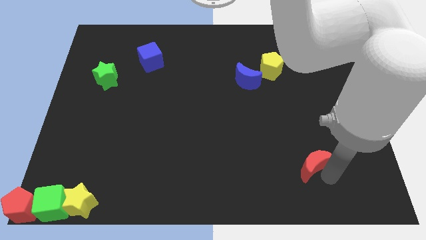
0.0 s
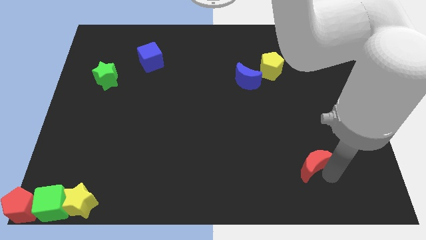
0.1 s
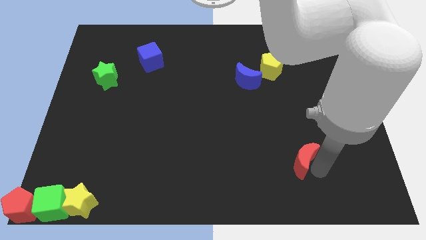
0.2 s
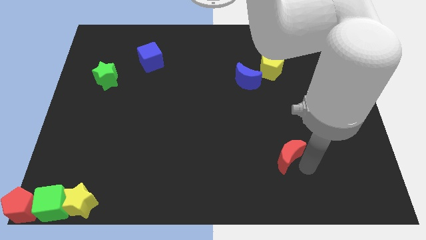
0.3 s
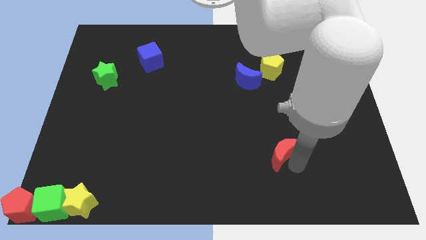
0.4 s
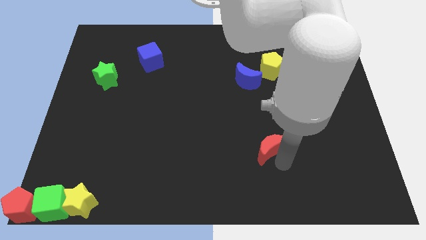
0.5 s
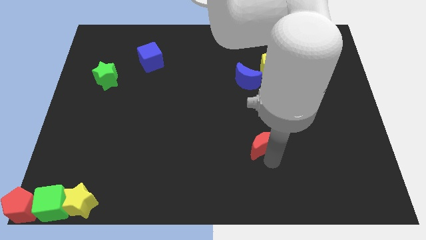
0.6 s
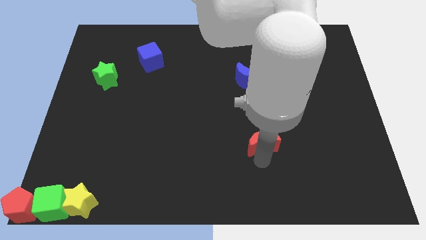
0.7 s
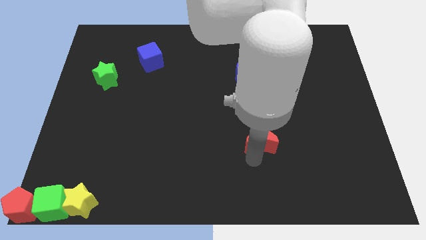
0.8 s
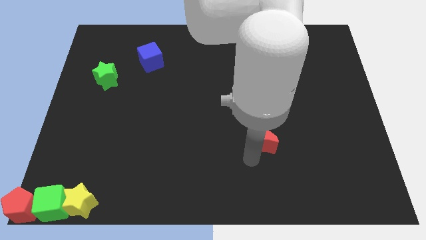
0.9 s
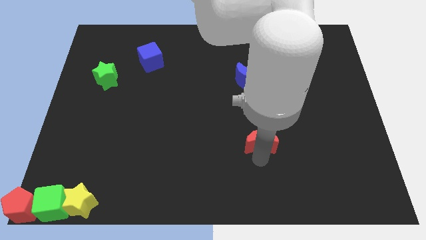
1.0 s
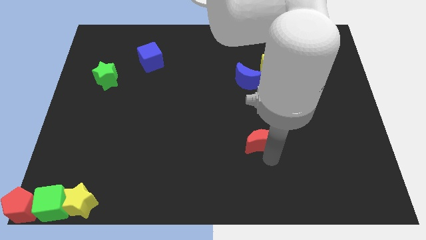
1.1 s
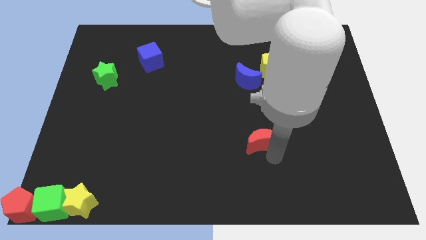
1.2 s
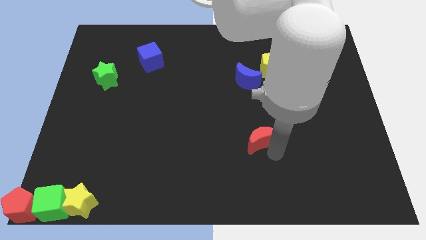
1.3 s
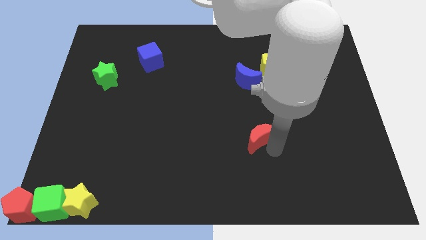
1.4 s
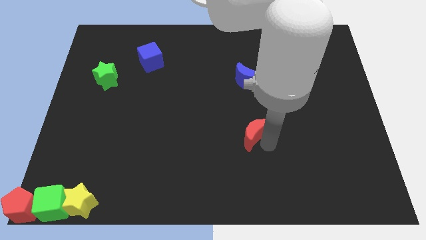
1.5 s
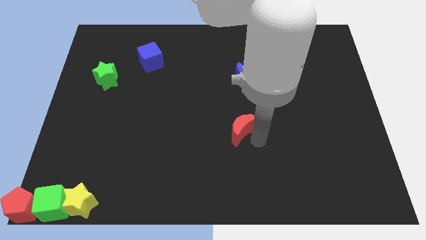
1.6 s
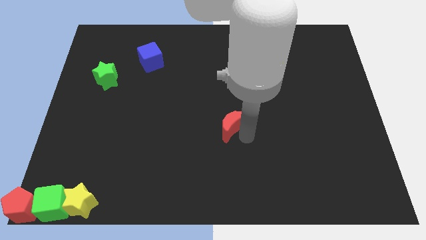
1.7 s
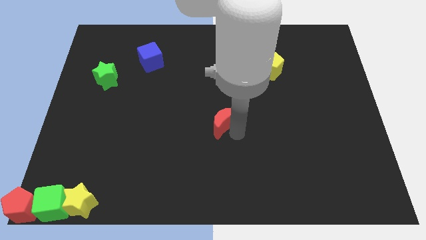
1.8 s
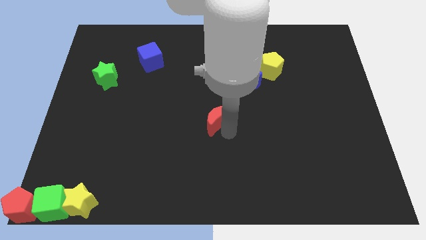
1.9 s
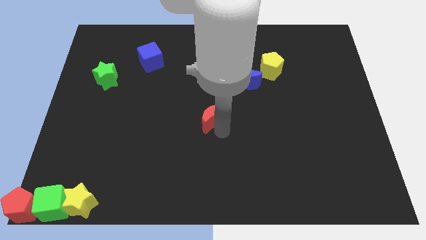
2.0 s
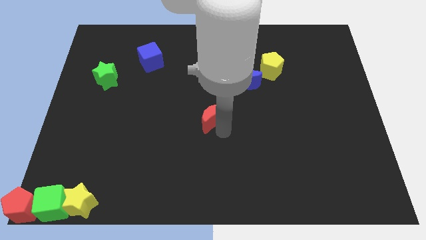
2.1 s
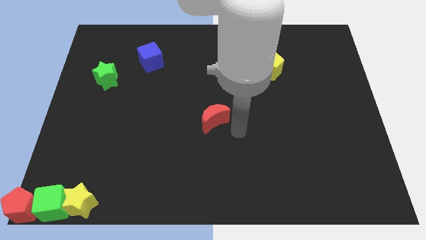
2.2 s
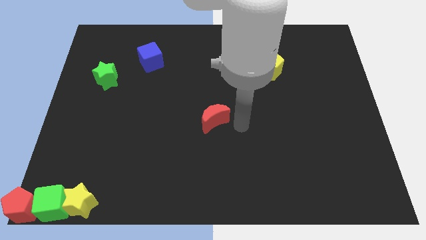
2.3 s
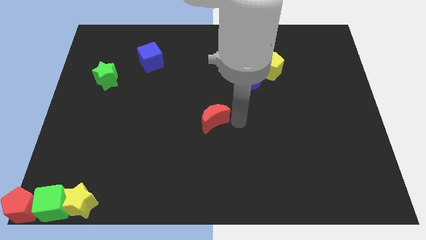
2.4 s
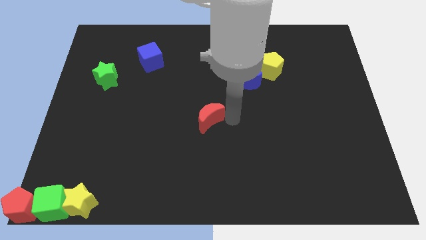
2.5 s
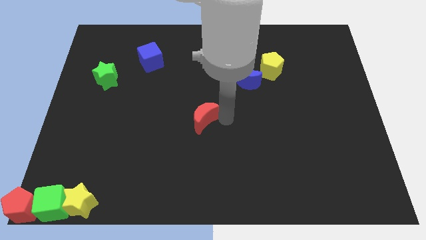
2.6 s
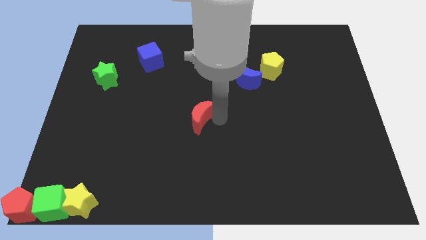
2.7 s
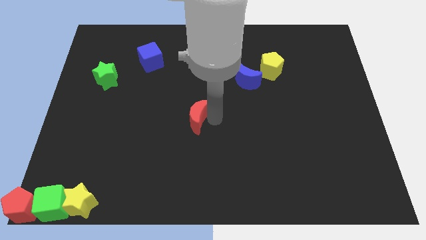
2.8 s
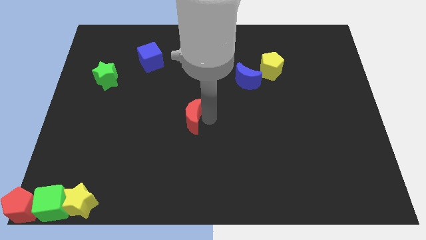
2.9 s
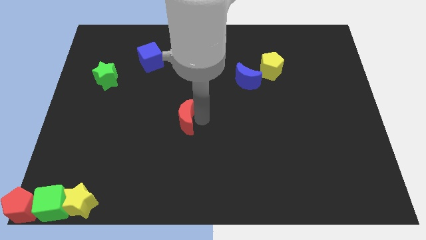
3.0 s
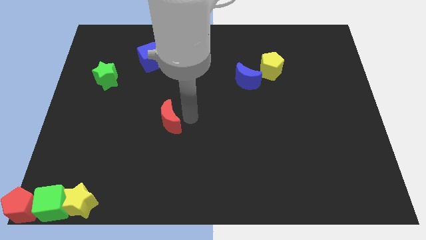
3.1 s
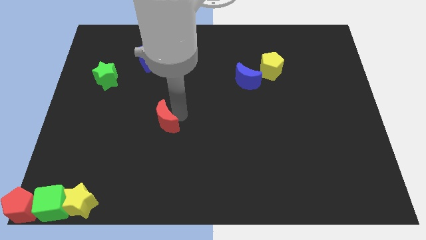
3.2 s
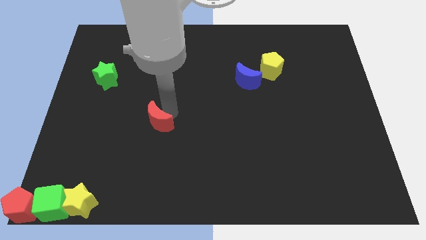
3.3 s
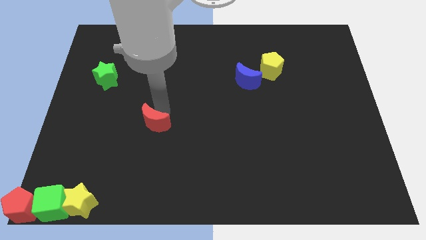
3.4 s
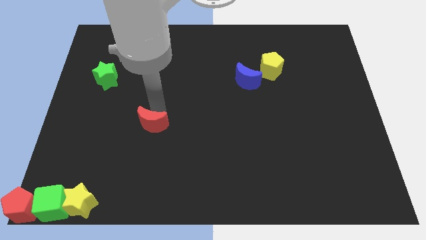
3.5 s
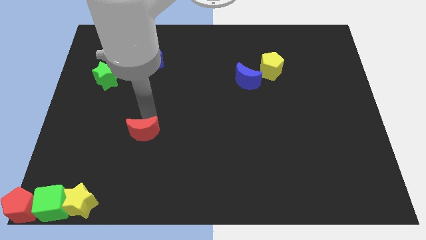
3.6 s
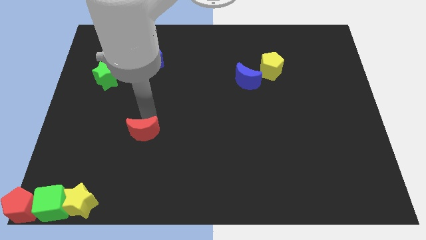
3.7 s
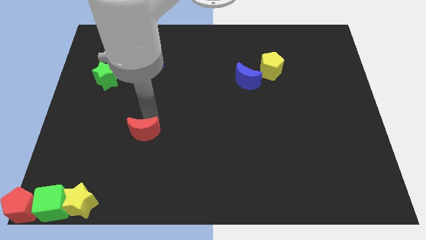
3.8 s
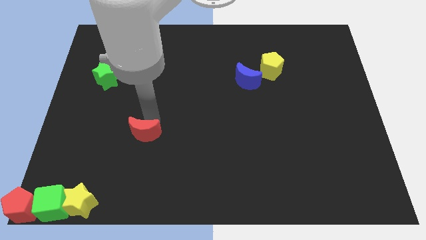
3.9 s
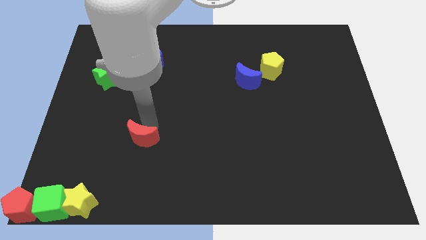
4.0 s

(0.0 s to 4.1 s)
place the red moon below the green star

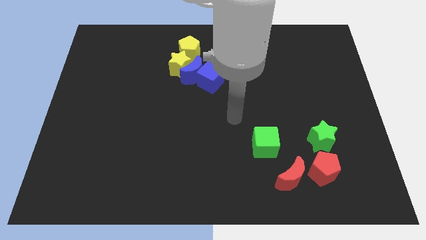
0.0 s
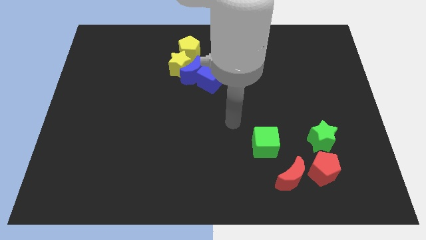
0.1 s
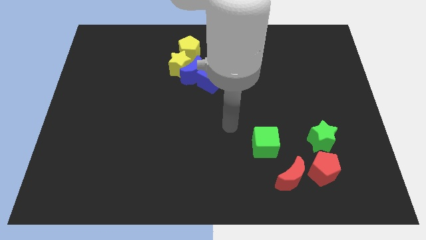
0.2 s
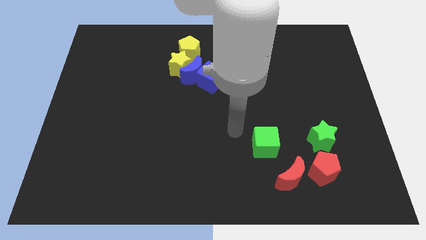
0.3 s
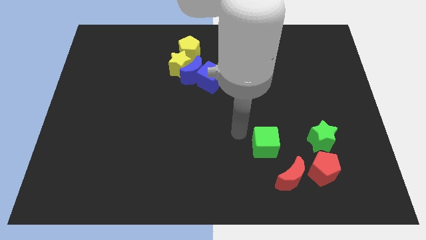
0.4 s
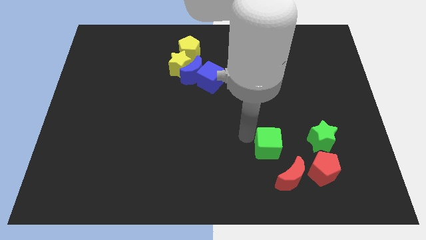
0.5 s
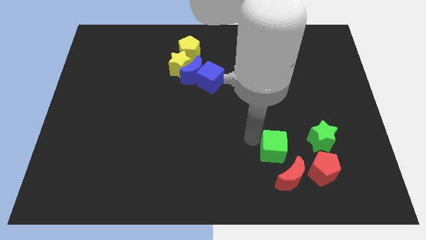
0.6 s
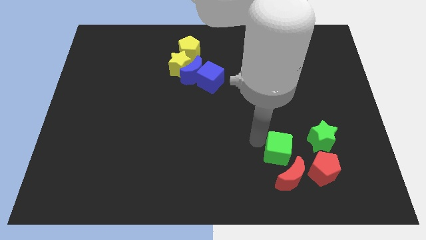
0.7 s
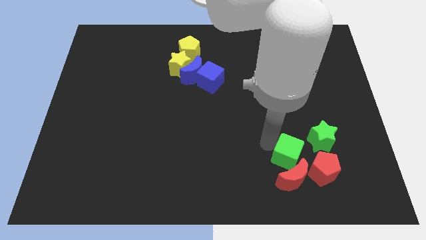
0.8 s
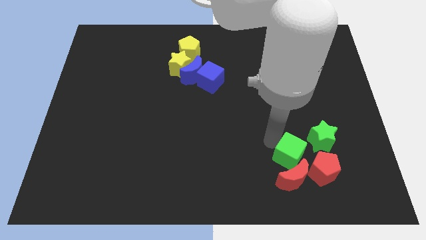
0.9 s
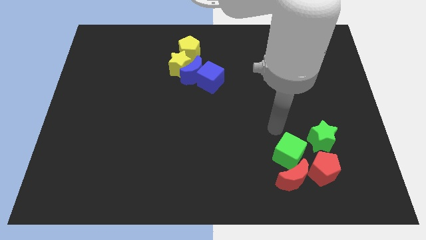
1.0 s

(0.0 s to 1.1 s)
move the green cube into the red moon

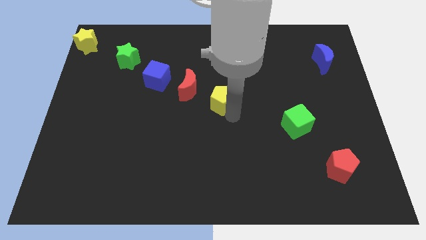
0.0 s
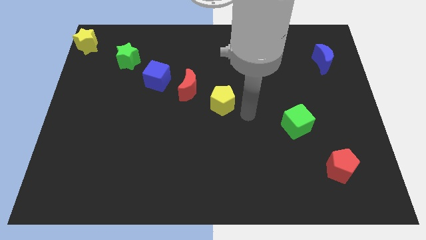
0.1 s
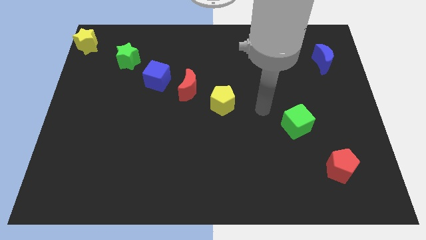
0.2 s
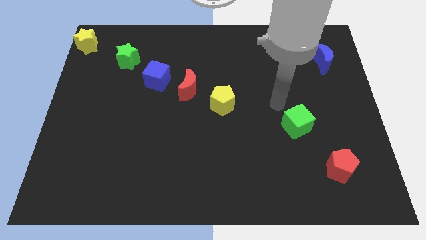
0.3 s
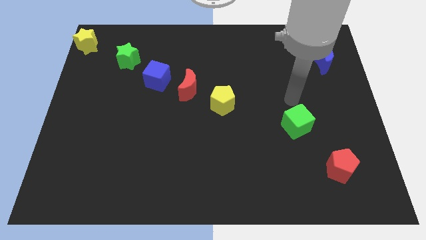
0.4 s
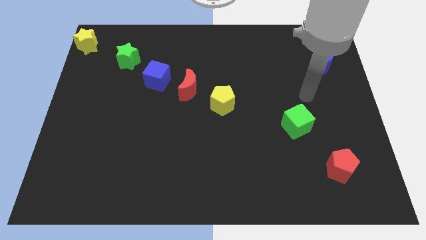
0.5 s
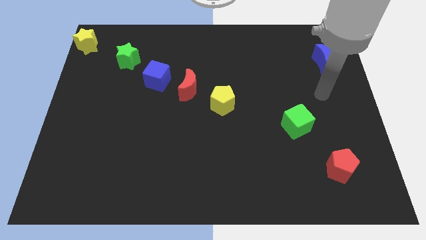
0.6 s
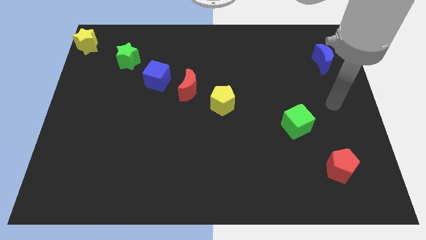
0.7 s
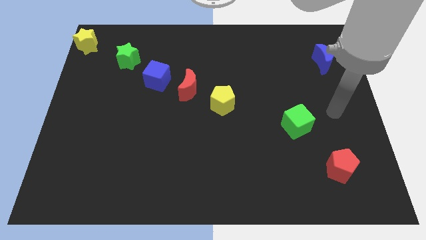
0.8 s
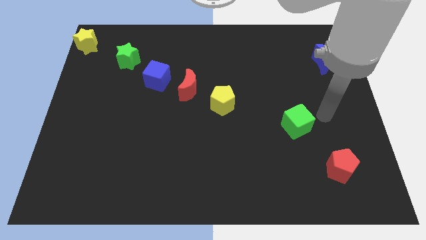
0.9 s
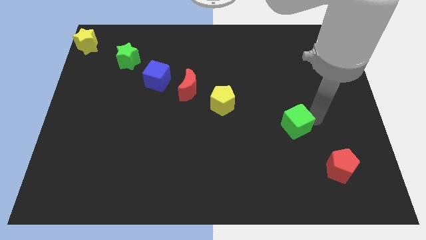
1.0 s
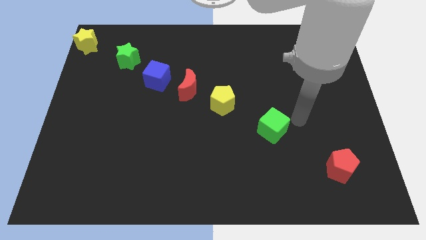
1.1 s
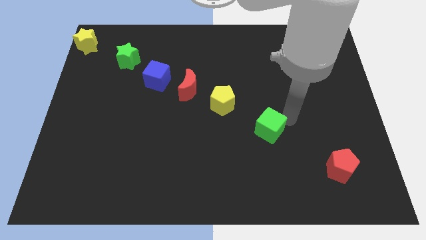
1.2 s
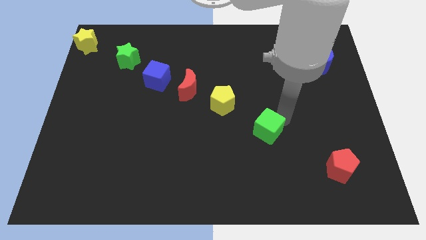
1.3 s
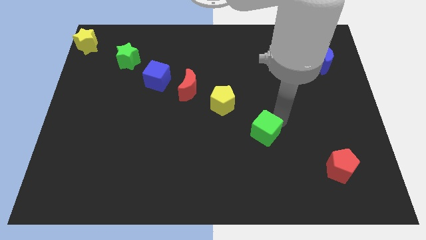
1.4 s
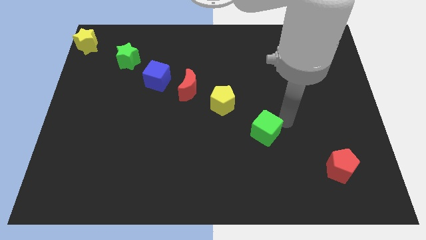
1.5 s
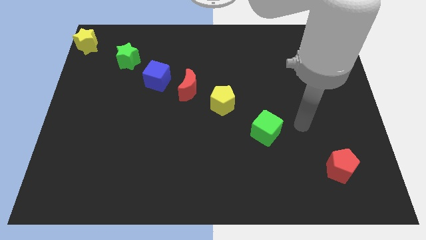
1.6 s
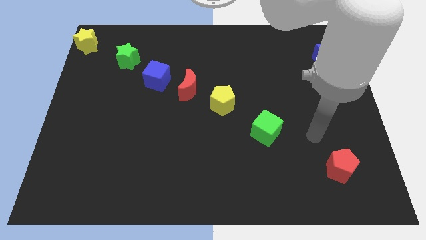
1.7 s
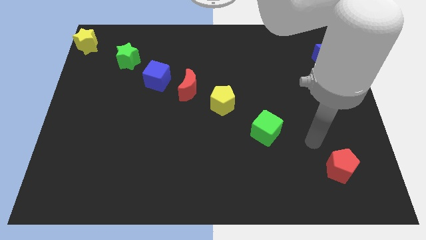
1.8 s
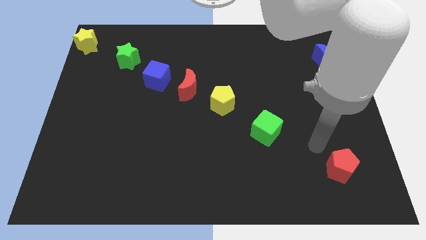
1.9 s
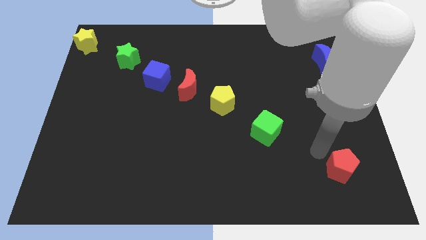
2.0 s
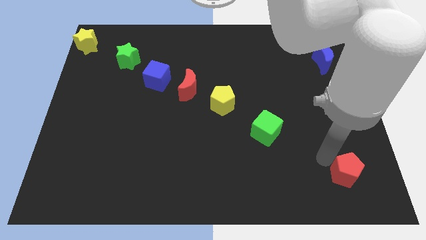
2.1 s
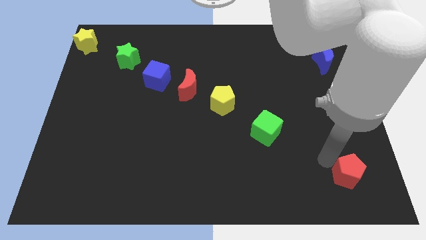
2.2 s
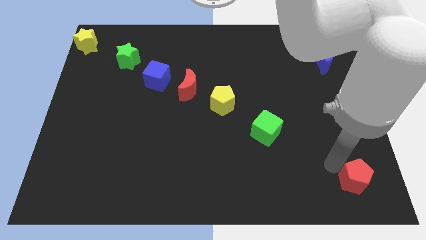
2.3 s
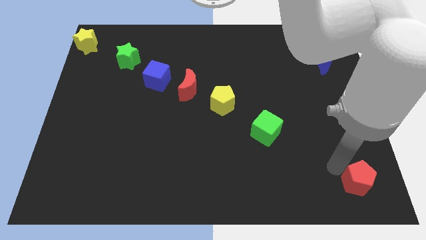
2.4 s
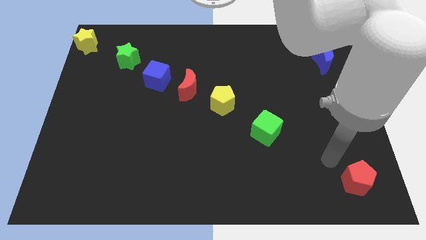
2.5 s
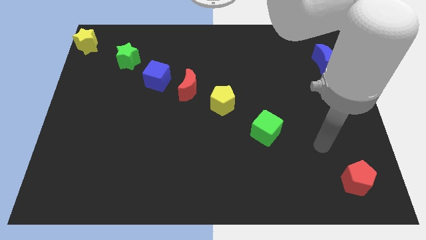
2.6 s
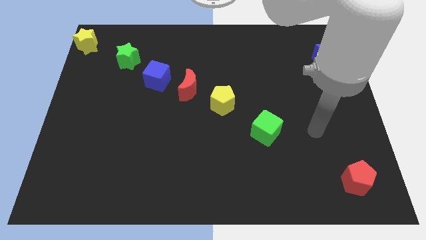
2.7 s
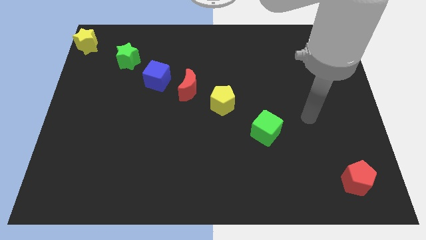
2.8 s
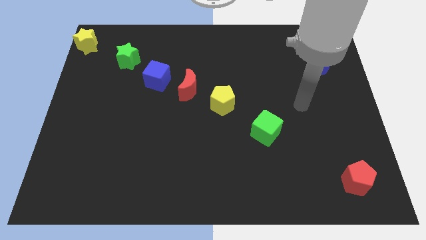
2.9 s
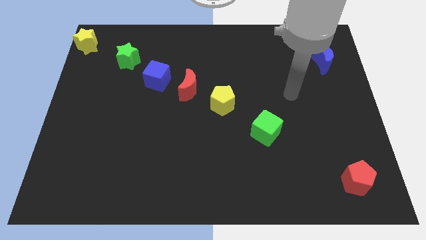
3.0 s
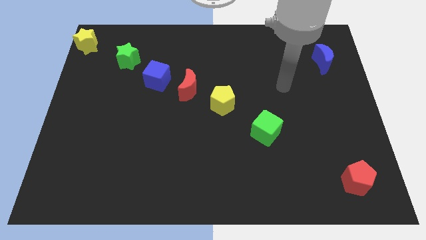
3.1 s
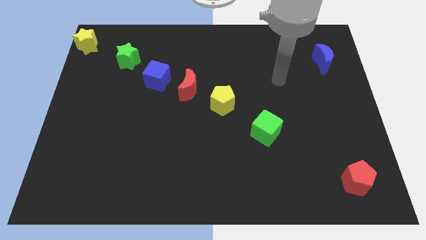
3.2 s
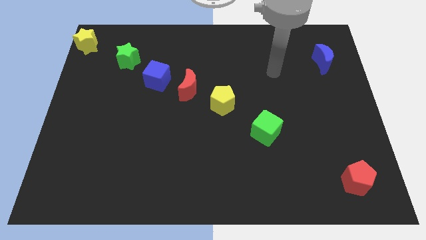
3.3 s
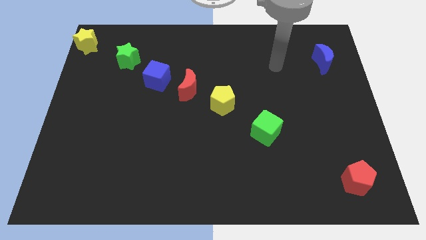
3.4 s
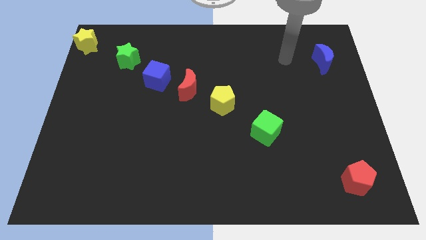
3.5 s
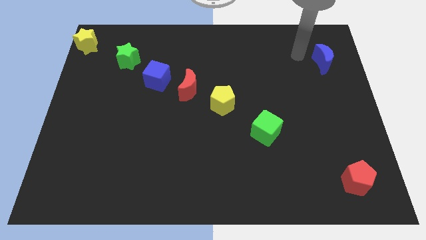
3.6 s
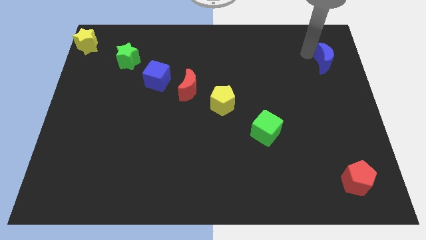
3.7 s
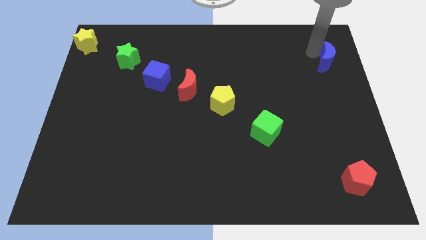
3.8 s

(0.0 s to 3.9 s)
line the blocks up diagonally except the blue moon
